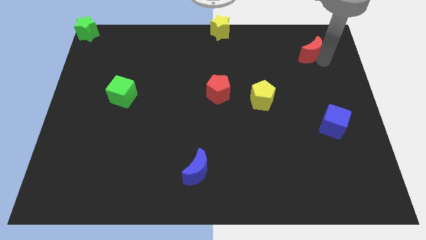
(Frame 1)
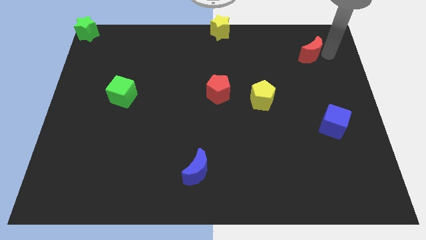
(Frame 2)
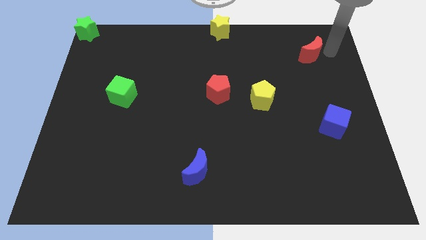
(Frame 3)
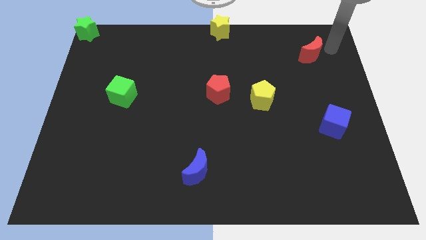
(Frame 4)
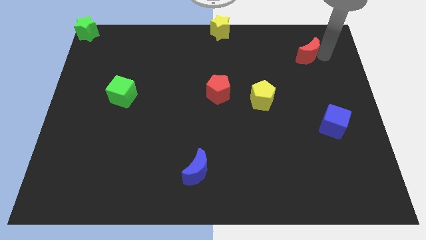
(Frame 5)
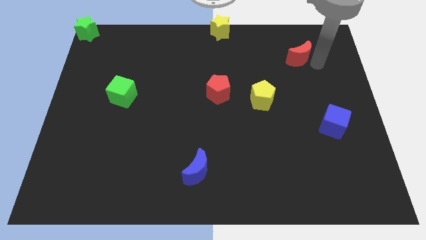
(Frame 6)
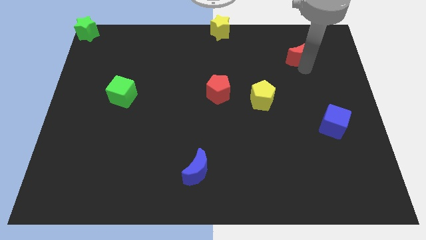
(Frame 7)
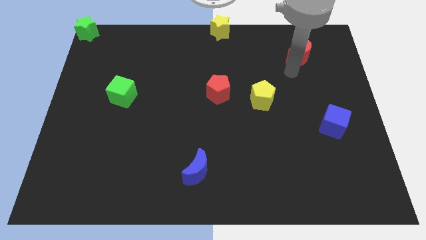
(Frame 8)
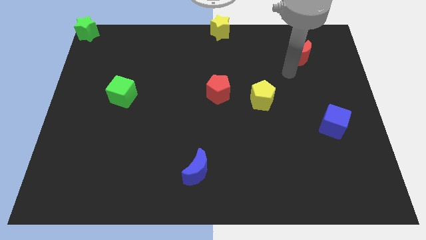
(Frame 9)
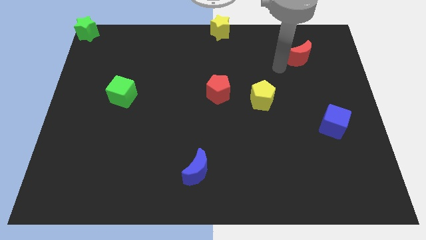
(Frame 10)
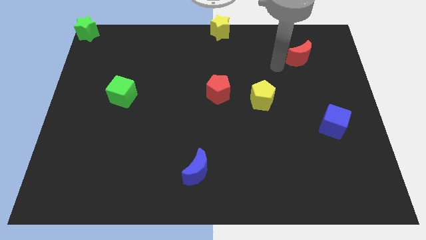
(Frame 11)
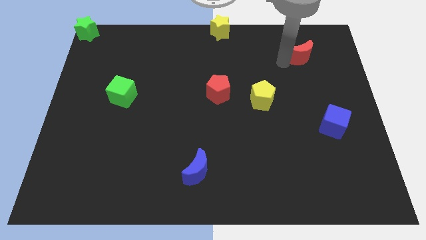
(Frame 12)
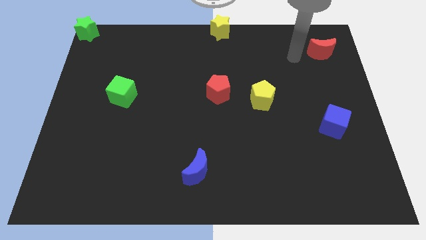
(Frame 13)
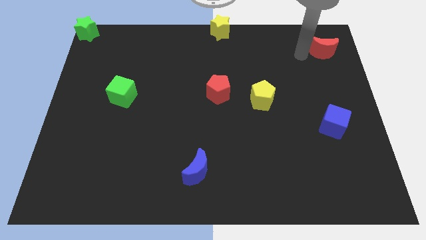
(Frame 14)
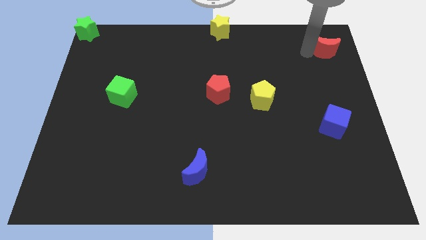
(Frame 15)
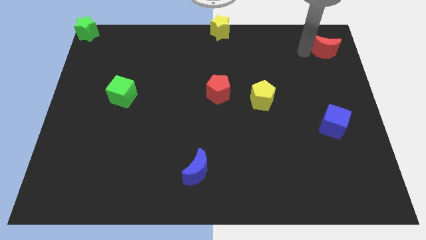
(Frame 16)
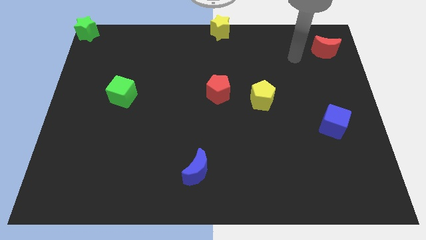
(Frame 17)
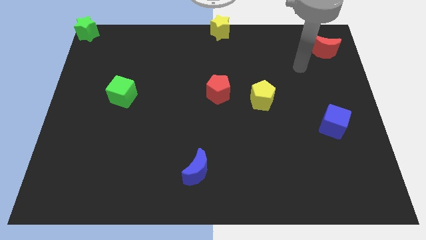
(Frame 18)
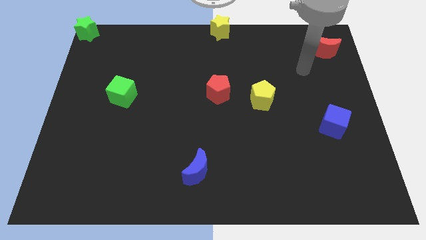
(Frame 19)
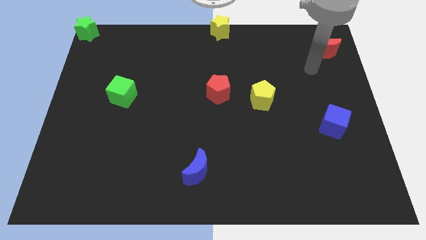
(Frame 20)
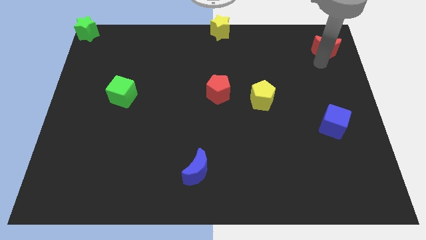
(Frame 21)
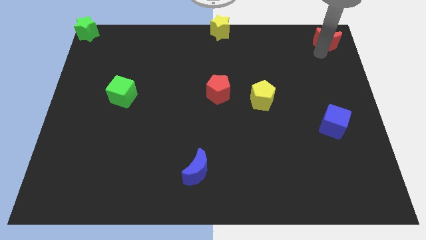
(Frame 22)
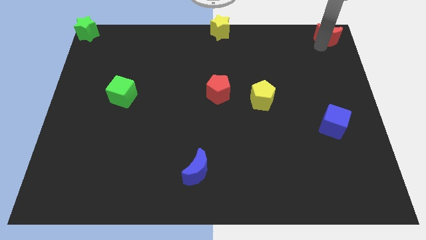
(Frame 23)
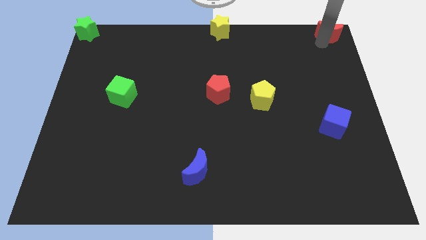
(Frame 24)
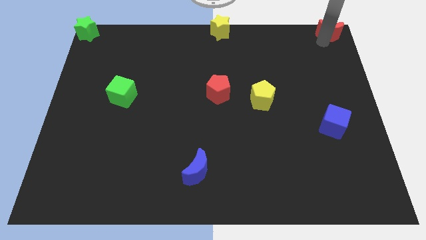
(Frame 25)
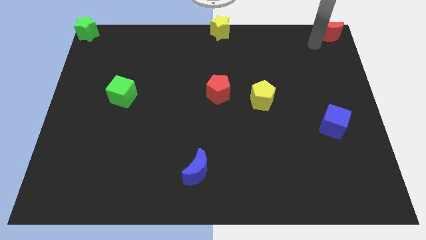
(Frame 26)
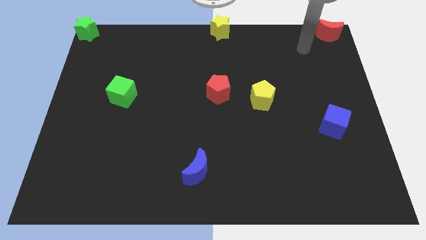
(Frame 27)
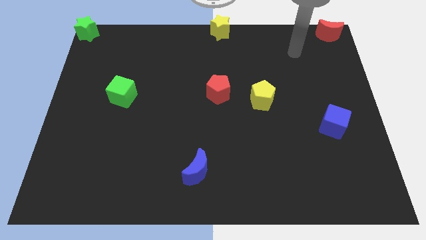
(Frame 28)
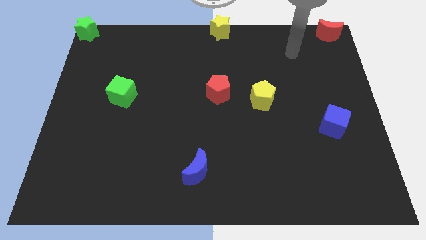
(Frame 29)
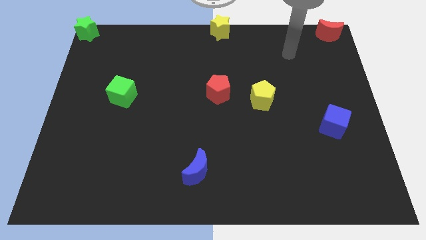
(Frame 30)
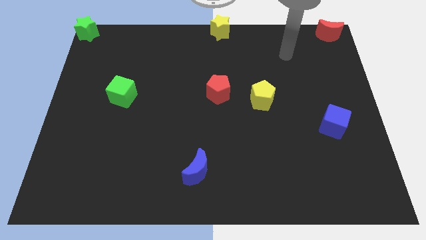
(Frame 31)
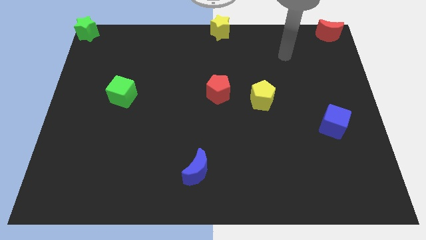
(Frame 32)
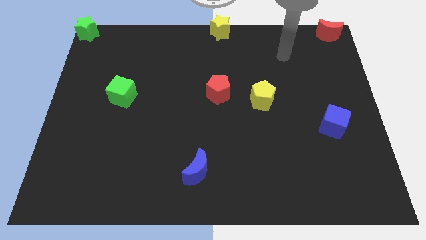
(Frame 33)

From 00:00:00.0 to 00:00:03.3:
move the red crescent to the top right corner of the board

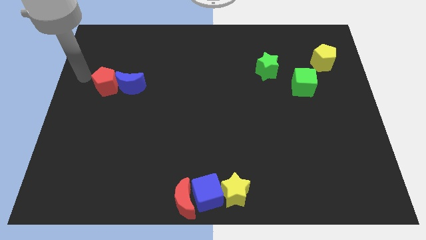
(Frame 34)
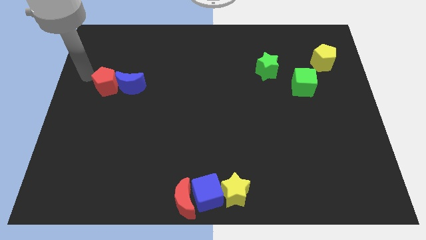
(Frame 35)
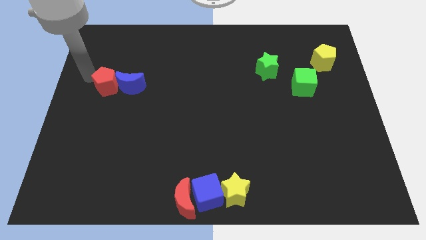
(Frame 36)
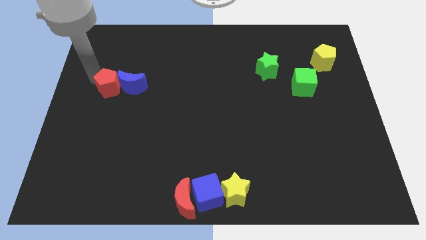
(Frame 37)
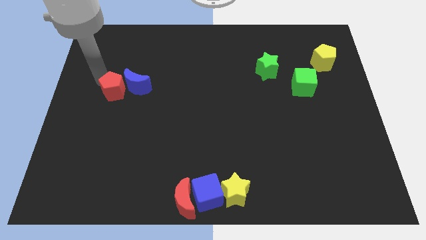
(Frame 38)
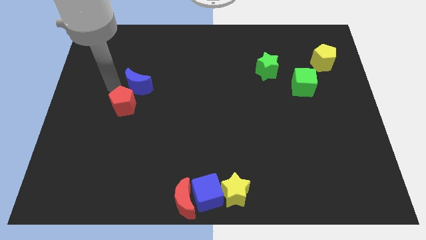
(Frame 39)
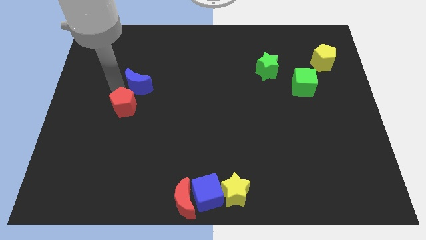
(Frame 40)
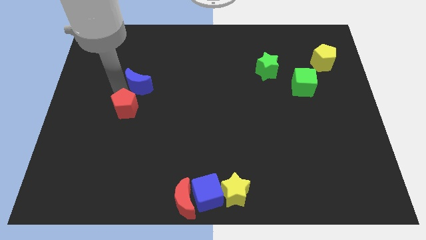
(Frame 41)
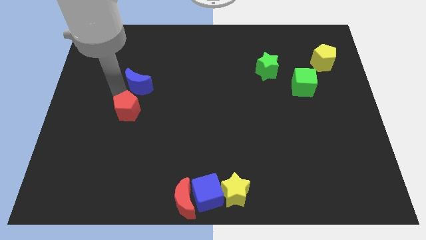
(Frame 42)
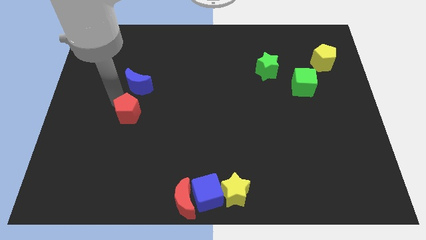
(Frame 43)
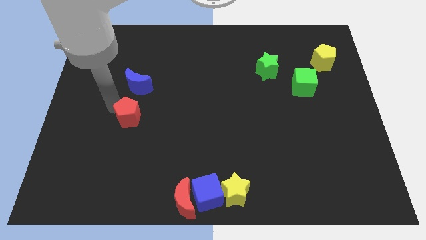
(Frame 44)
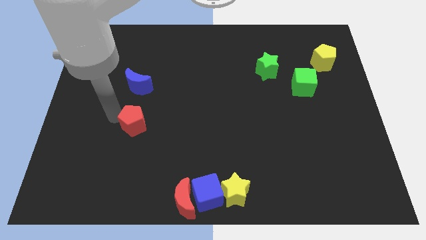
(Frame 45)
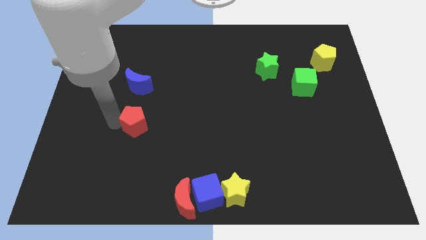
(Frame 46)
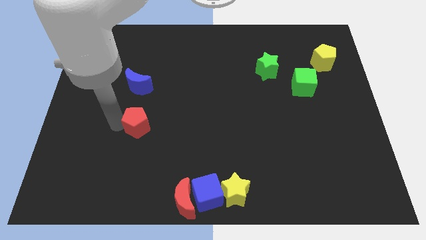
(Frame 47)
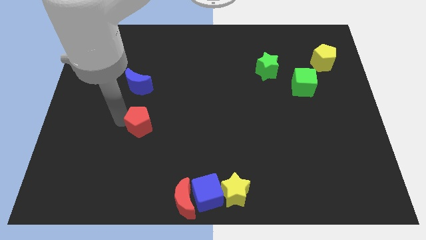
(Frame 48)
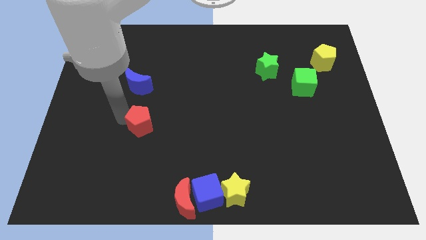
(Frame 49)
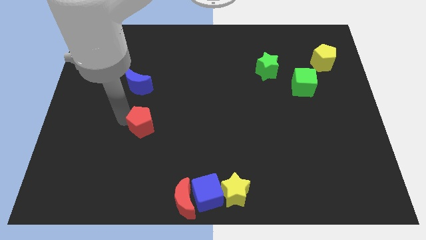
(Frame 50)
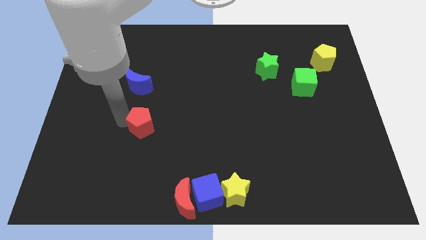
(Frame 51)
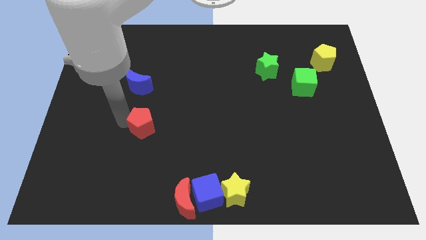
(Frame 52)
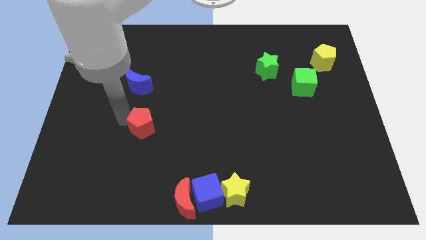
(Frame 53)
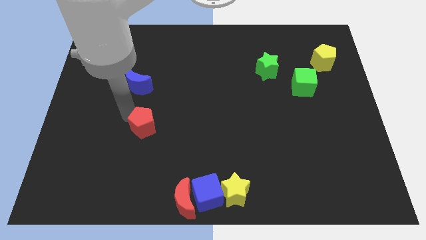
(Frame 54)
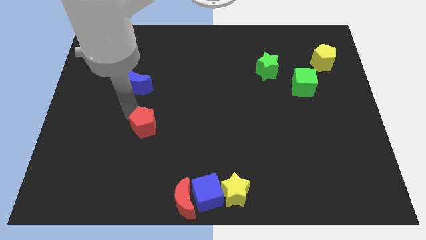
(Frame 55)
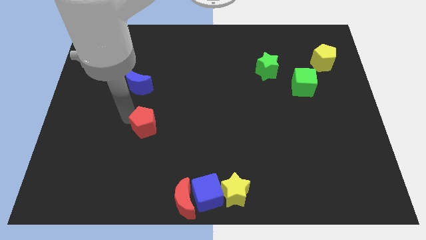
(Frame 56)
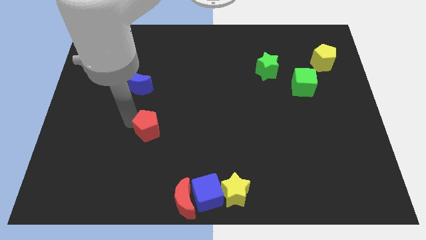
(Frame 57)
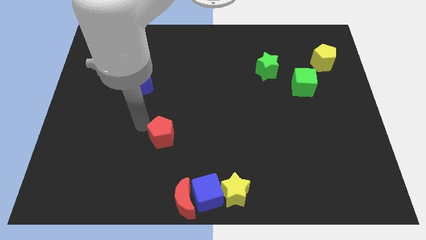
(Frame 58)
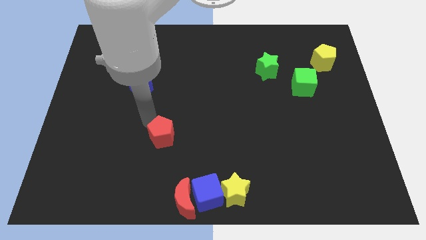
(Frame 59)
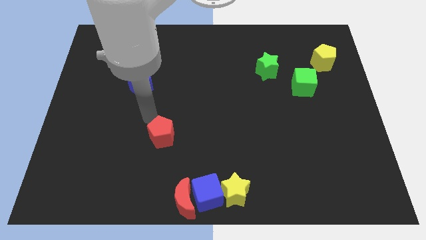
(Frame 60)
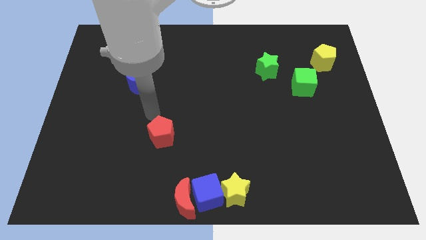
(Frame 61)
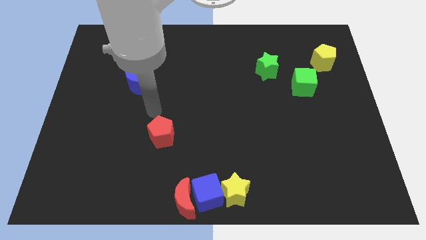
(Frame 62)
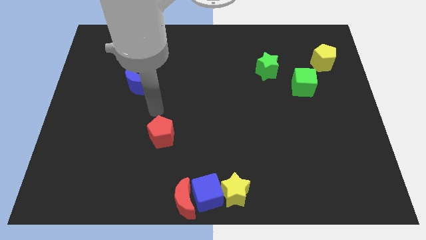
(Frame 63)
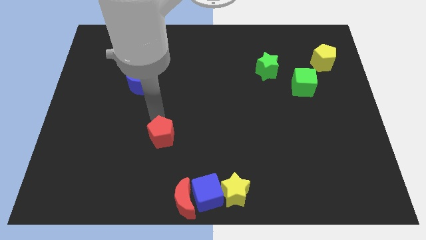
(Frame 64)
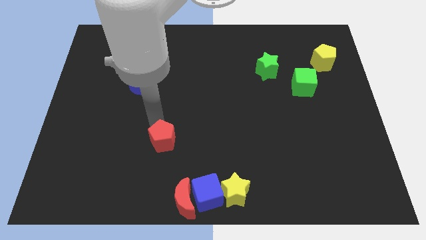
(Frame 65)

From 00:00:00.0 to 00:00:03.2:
separate red pentagon from the blue crescent

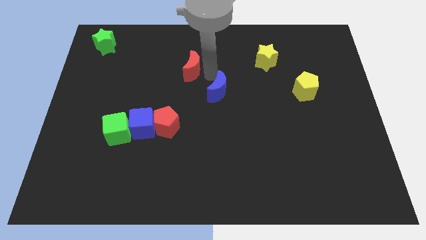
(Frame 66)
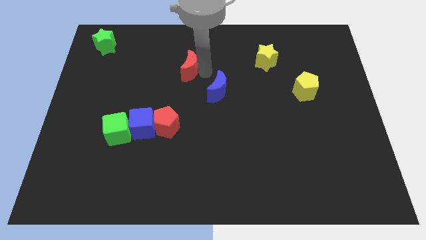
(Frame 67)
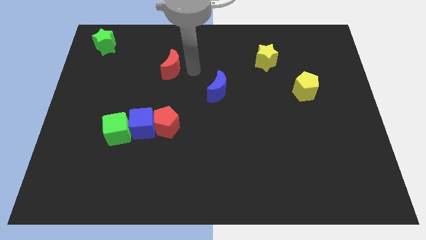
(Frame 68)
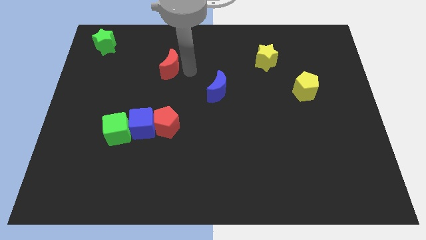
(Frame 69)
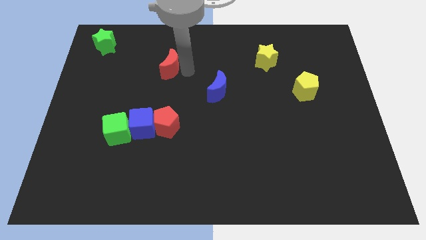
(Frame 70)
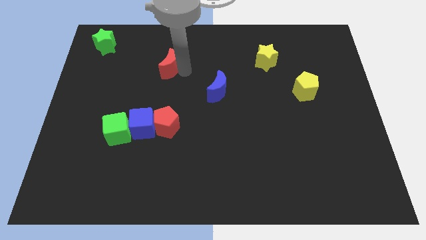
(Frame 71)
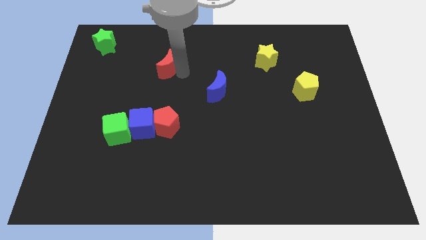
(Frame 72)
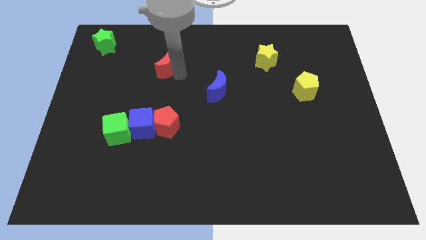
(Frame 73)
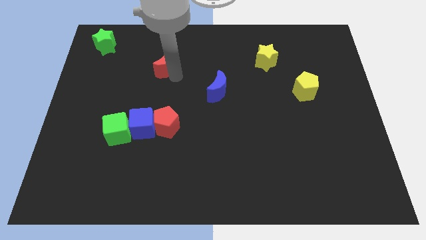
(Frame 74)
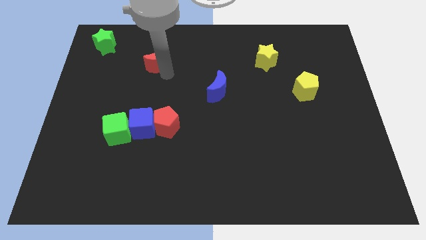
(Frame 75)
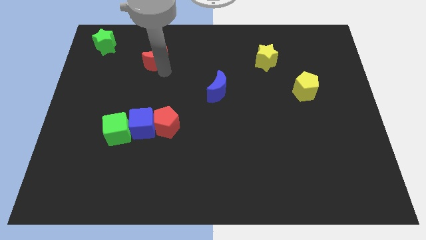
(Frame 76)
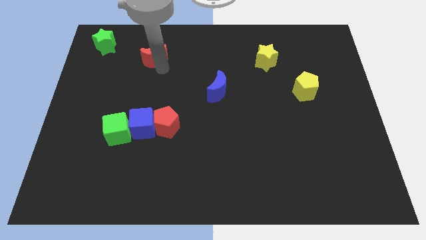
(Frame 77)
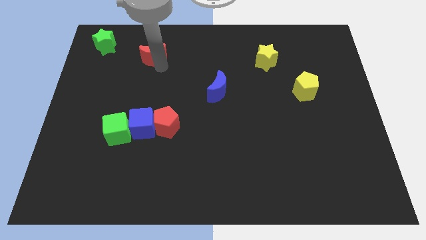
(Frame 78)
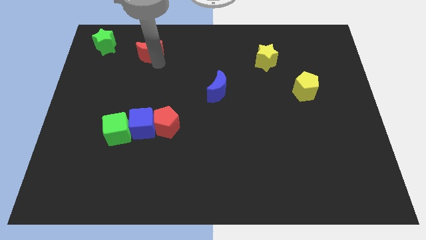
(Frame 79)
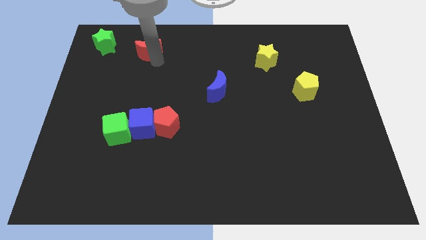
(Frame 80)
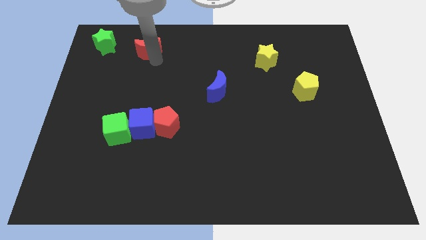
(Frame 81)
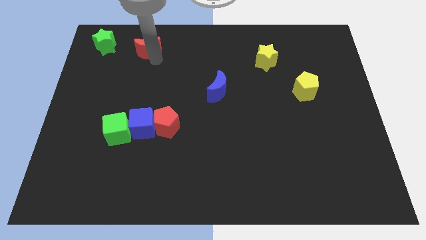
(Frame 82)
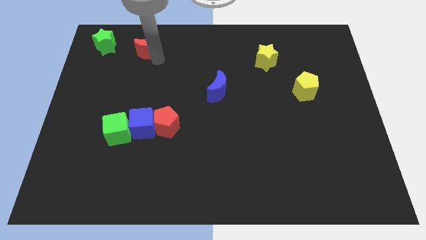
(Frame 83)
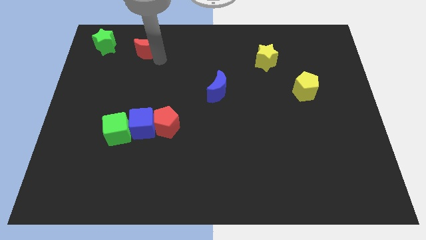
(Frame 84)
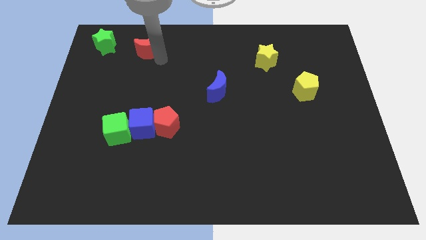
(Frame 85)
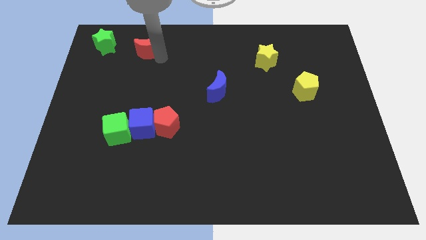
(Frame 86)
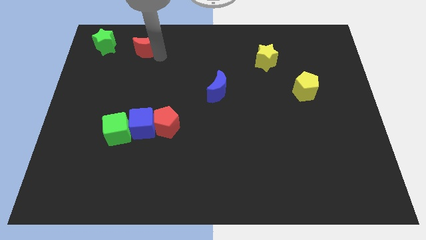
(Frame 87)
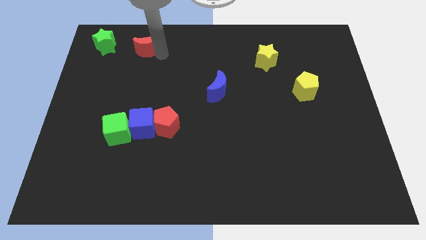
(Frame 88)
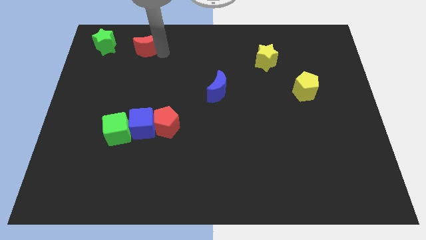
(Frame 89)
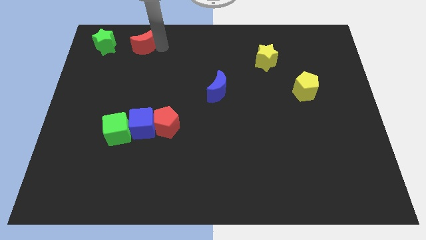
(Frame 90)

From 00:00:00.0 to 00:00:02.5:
move the red moon towards the green star
